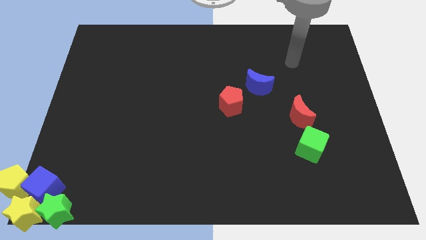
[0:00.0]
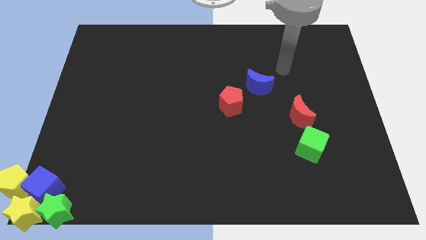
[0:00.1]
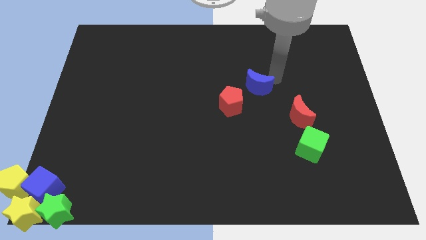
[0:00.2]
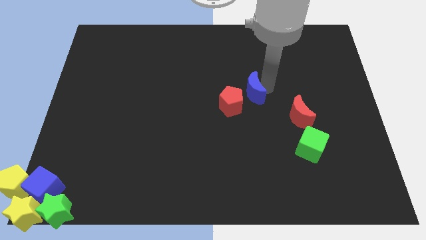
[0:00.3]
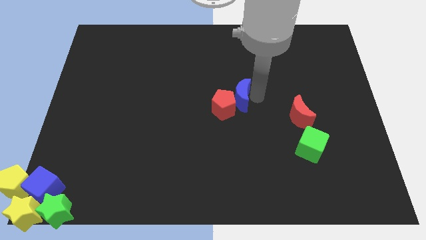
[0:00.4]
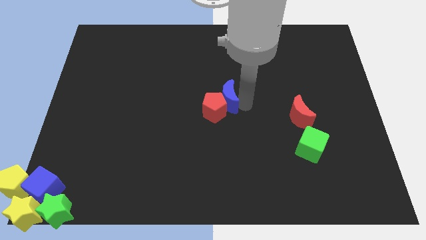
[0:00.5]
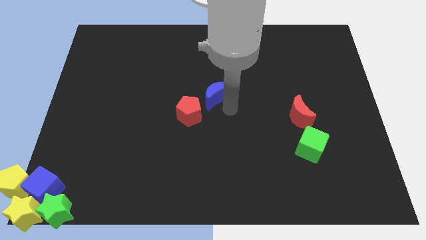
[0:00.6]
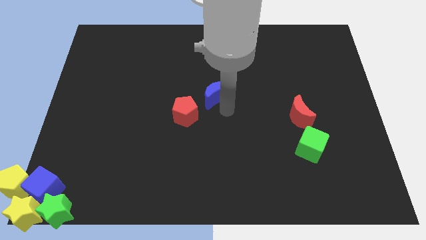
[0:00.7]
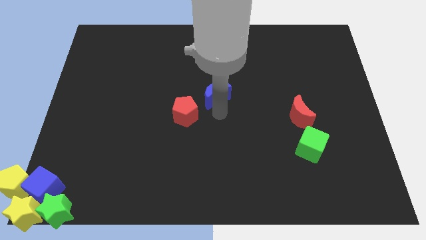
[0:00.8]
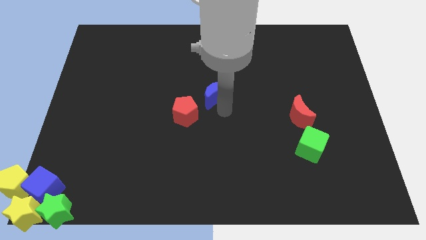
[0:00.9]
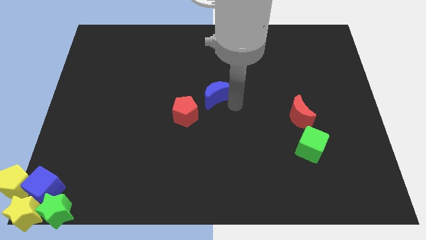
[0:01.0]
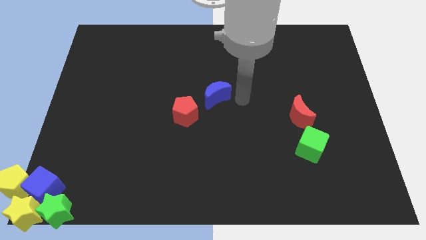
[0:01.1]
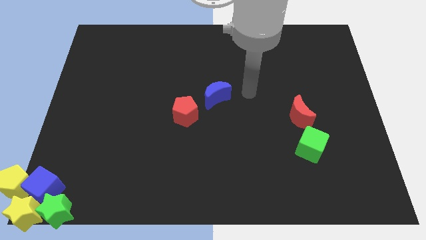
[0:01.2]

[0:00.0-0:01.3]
move the blue moon into the red pentagon

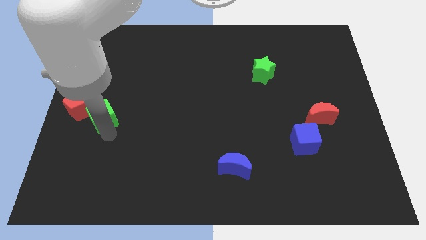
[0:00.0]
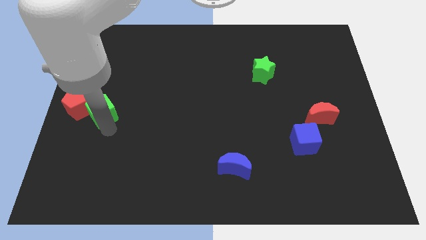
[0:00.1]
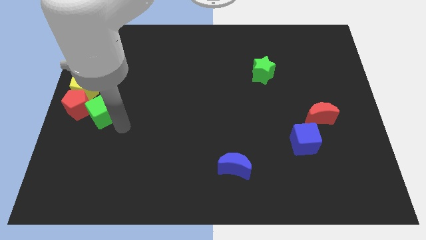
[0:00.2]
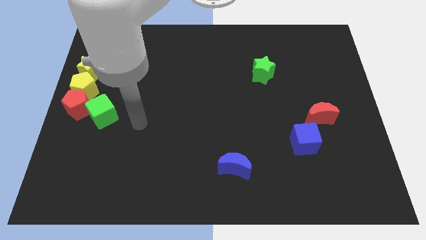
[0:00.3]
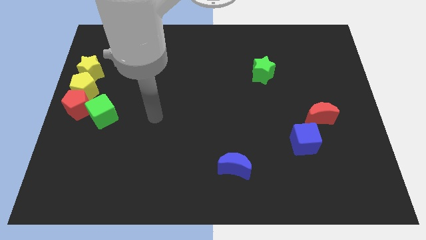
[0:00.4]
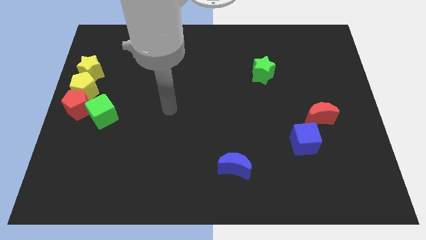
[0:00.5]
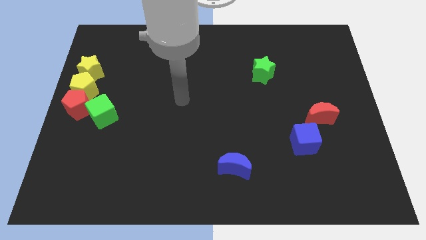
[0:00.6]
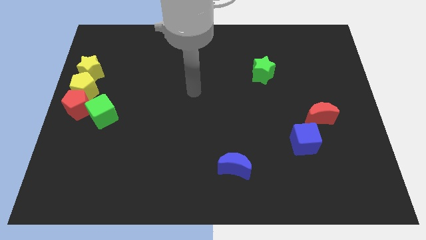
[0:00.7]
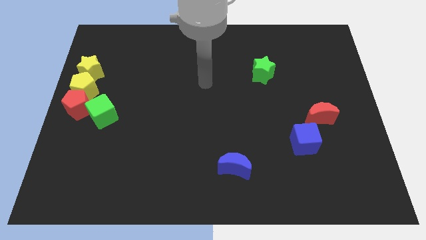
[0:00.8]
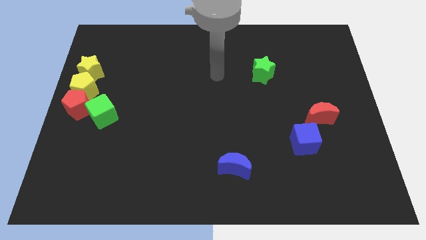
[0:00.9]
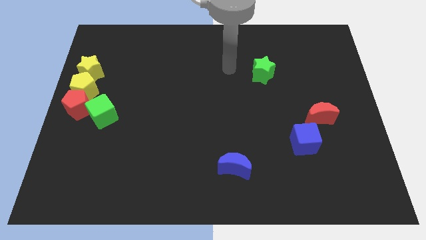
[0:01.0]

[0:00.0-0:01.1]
move the arm away from the green cube

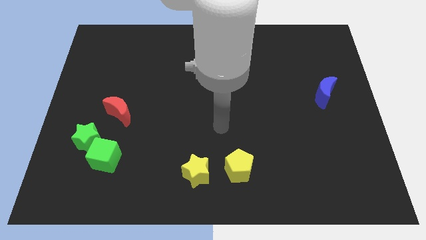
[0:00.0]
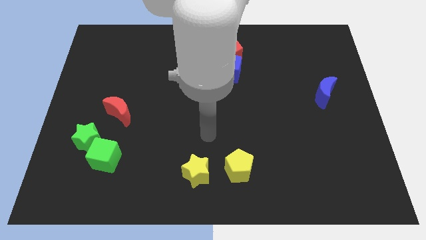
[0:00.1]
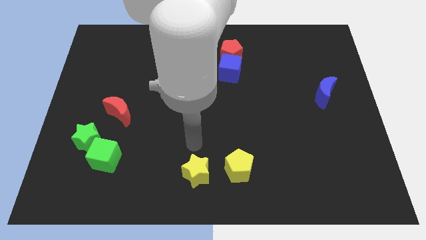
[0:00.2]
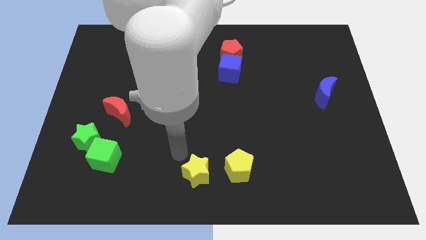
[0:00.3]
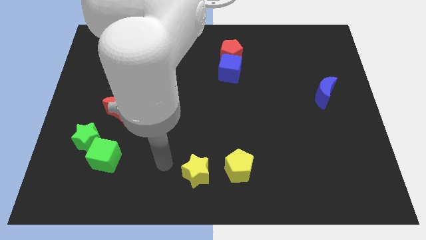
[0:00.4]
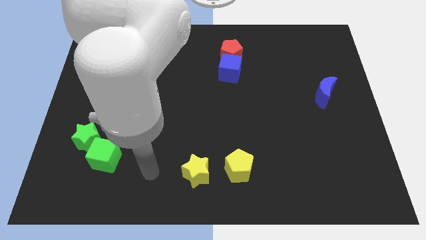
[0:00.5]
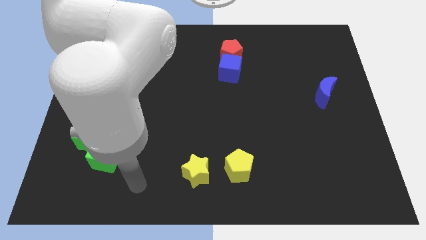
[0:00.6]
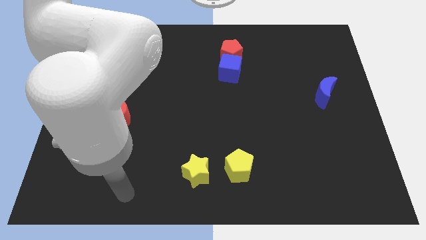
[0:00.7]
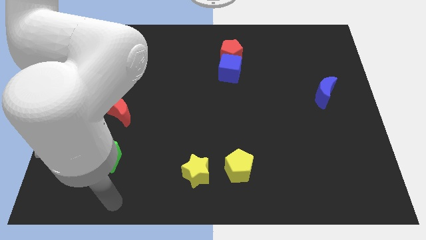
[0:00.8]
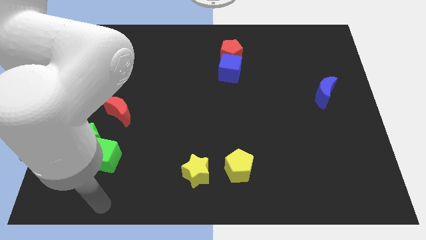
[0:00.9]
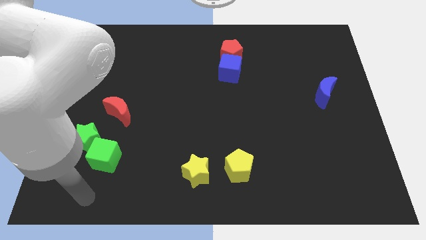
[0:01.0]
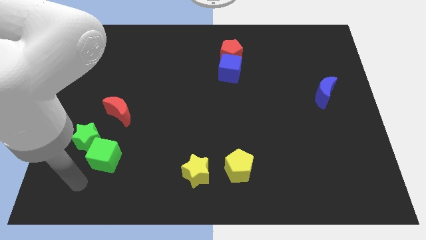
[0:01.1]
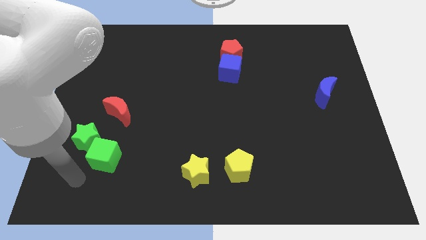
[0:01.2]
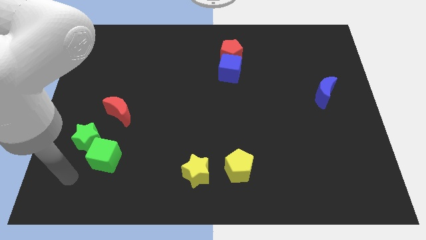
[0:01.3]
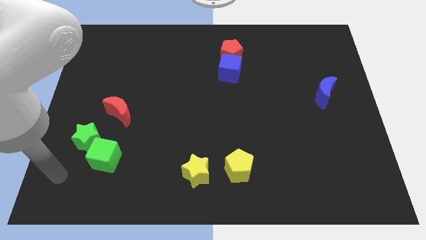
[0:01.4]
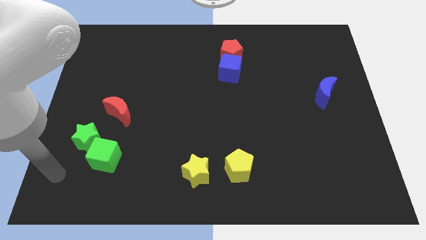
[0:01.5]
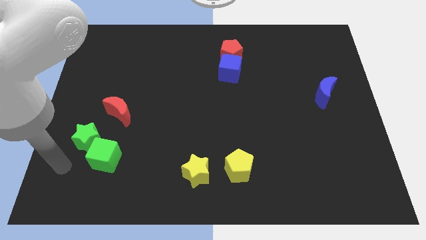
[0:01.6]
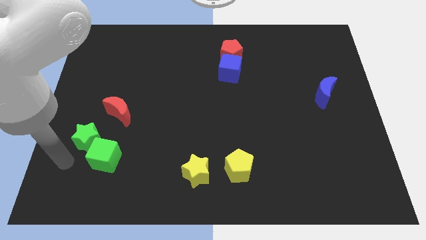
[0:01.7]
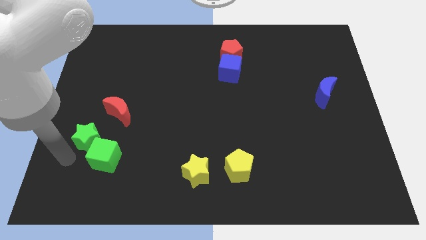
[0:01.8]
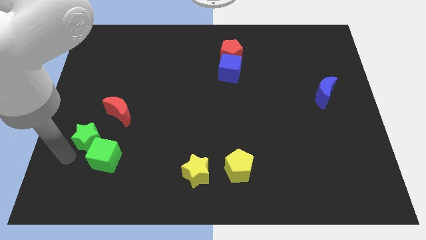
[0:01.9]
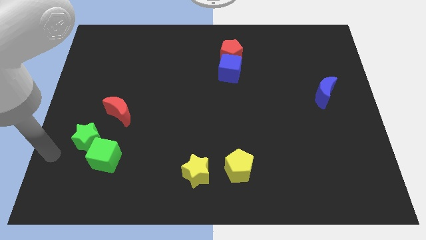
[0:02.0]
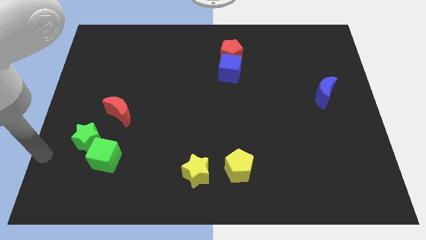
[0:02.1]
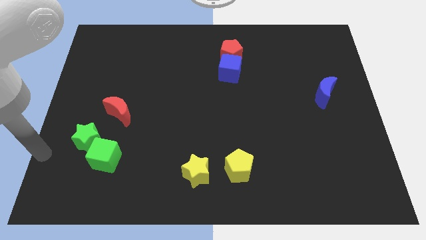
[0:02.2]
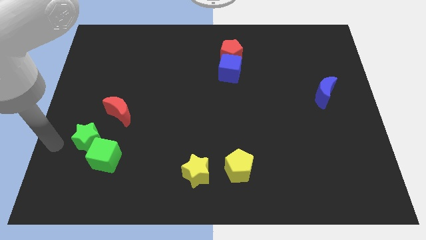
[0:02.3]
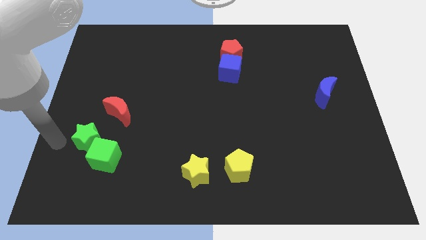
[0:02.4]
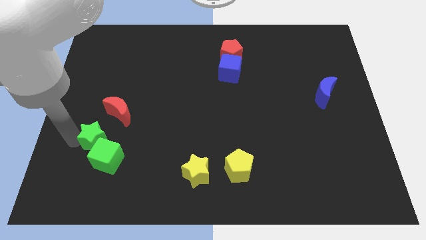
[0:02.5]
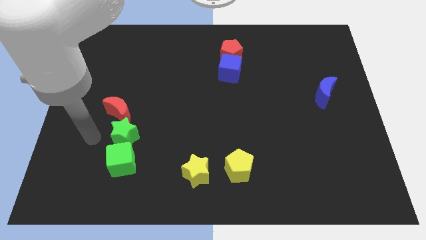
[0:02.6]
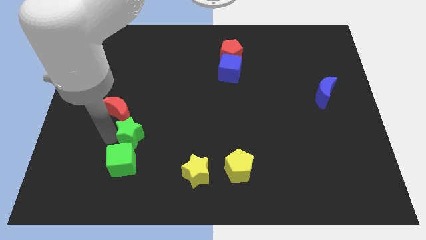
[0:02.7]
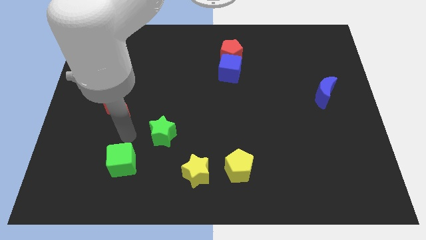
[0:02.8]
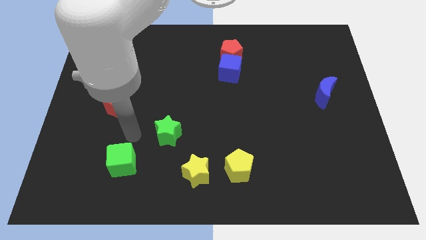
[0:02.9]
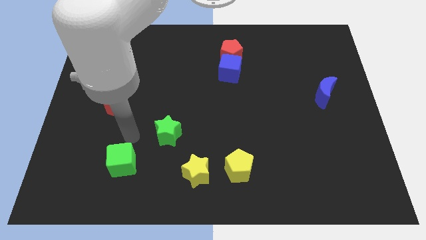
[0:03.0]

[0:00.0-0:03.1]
move the green star away from the green cube

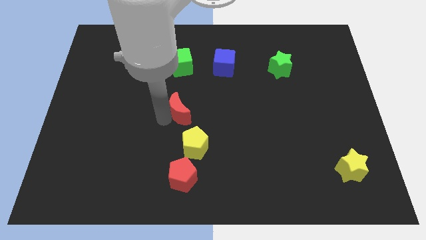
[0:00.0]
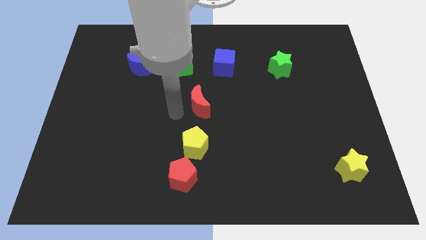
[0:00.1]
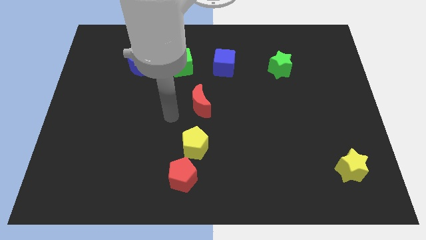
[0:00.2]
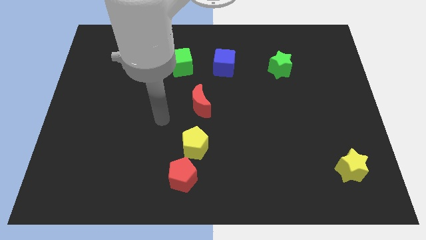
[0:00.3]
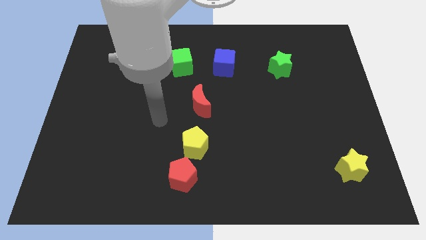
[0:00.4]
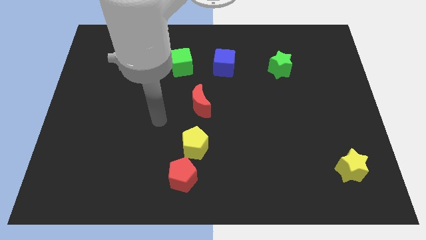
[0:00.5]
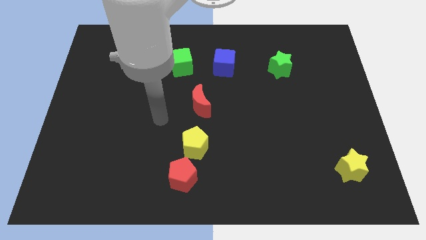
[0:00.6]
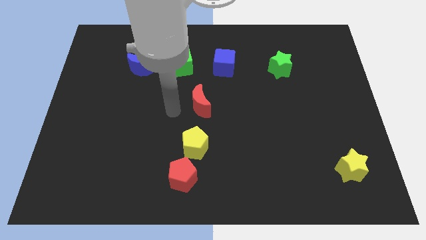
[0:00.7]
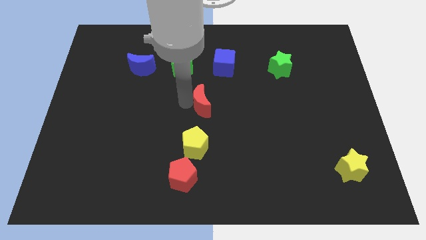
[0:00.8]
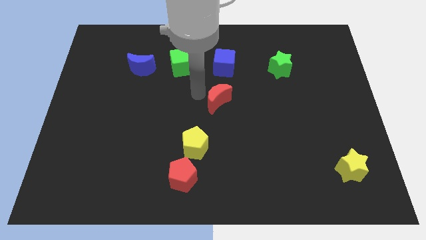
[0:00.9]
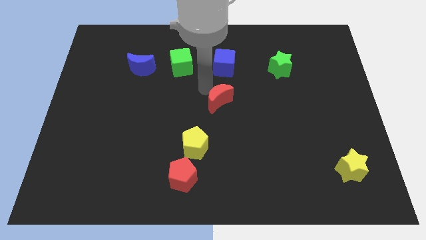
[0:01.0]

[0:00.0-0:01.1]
push red crescent below blue cube

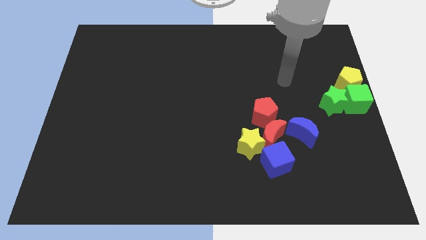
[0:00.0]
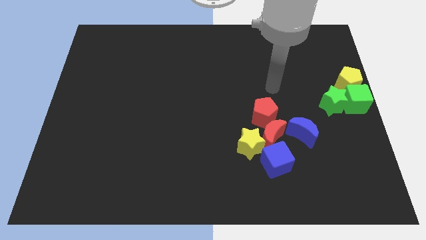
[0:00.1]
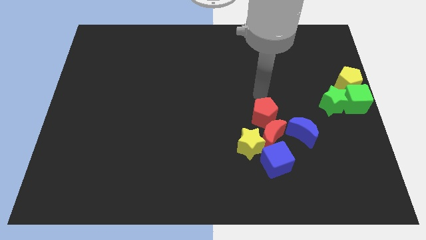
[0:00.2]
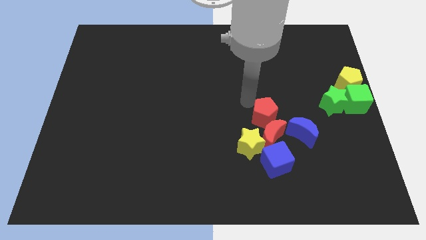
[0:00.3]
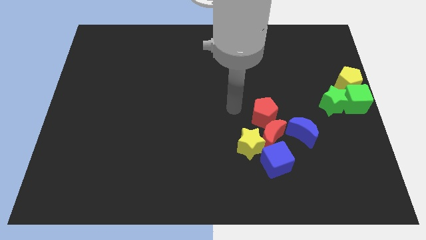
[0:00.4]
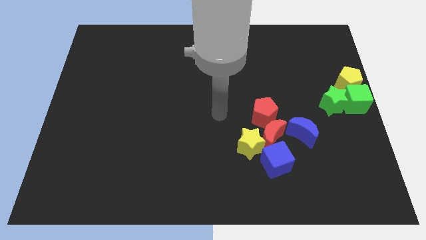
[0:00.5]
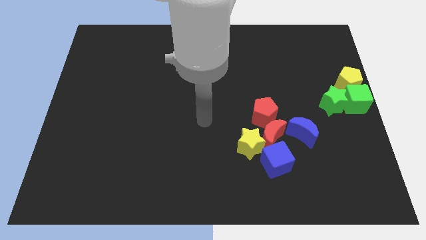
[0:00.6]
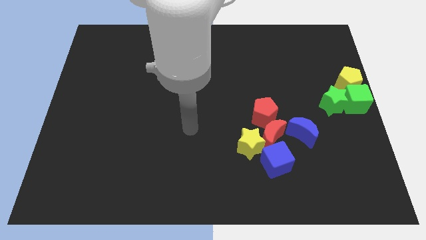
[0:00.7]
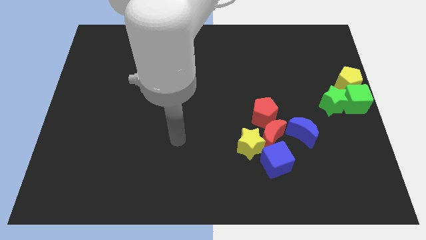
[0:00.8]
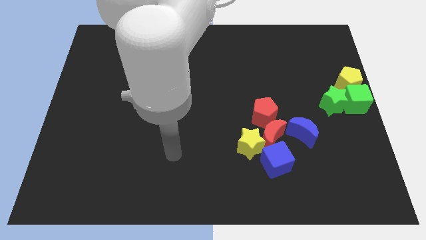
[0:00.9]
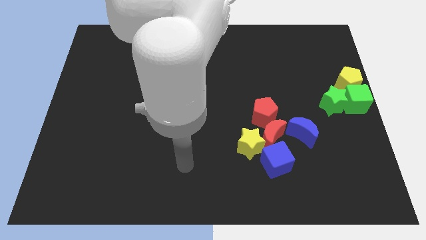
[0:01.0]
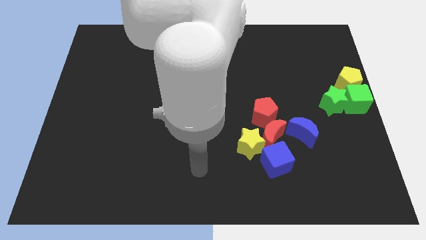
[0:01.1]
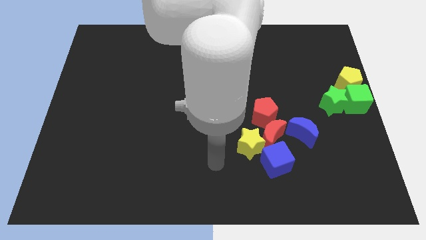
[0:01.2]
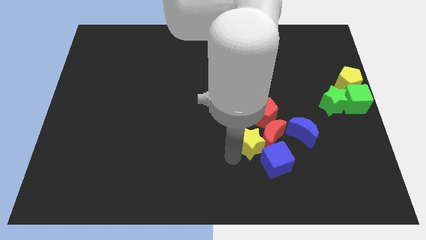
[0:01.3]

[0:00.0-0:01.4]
point your arm at the bottom left side of the yellow star

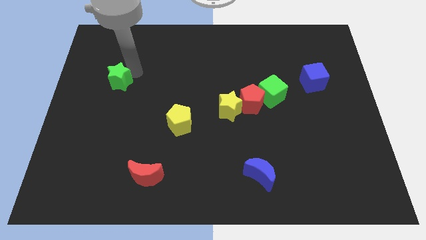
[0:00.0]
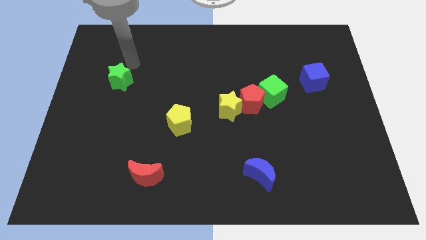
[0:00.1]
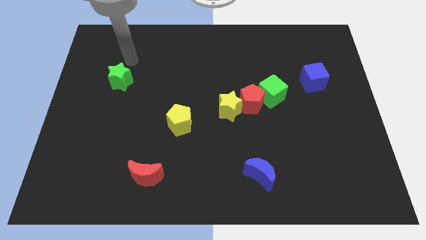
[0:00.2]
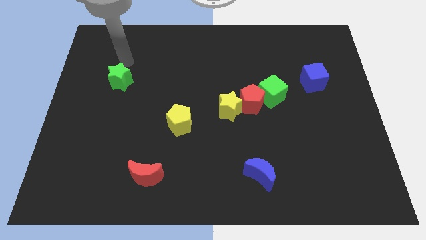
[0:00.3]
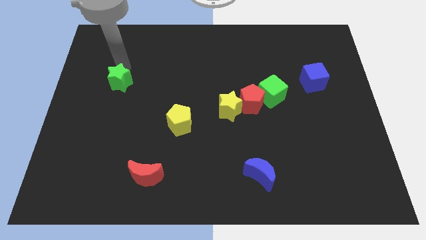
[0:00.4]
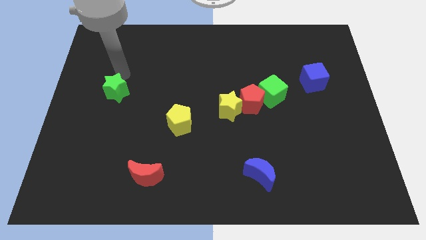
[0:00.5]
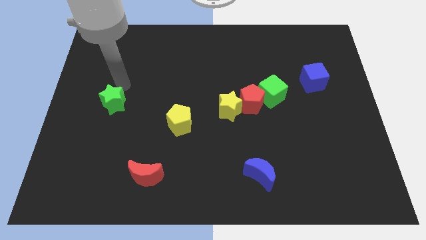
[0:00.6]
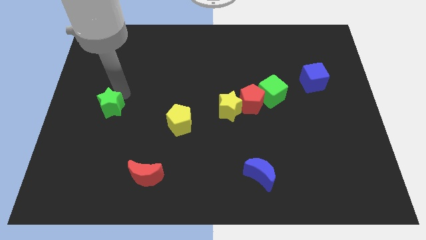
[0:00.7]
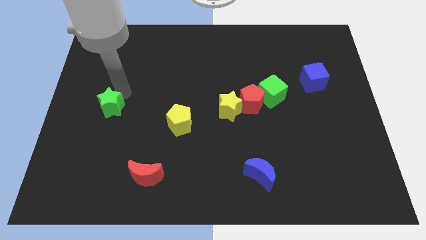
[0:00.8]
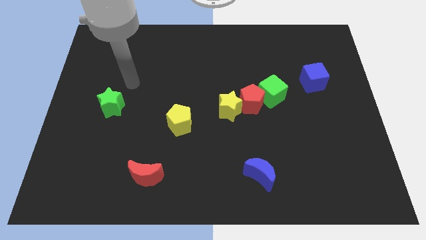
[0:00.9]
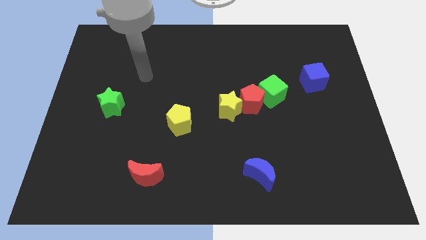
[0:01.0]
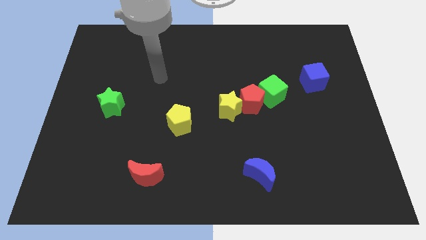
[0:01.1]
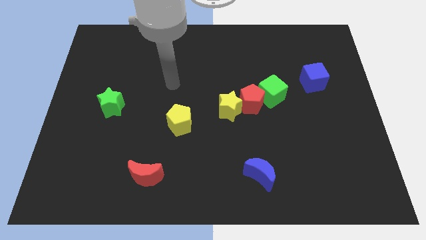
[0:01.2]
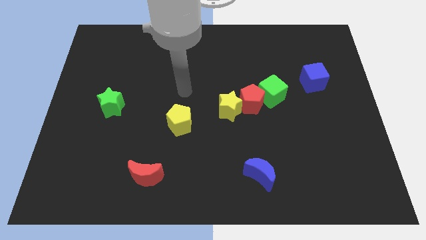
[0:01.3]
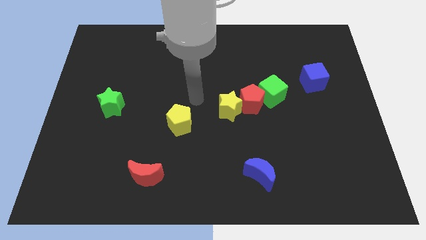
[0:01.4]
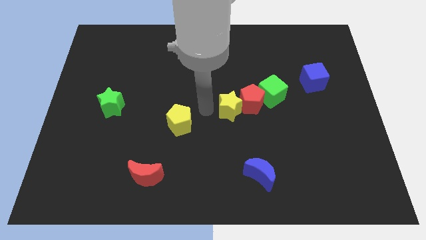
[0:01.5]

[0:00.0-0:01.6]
push green star downwards a bit
